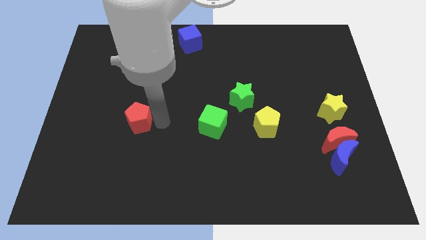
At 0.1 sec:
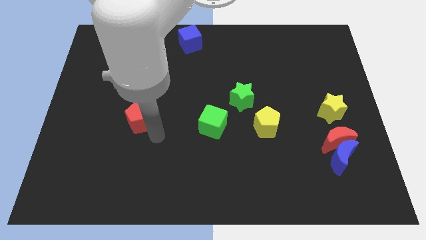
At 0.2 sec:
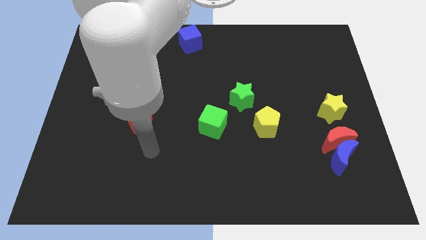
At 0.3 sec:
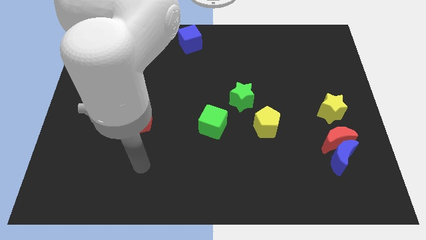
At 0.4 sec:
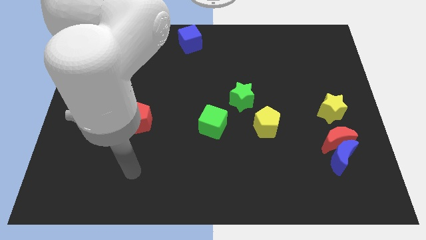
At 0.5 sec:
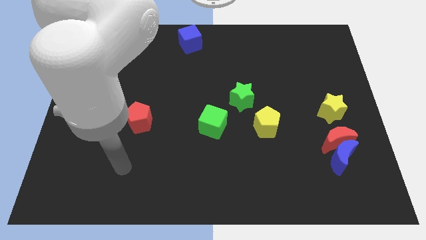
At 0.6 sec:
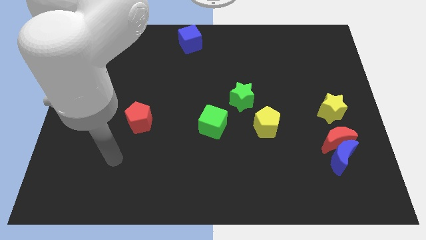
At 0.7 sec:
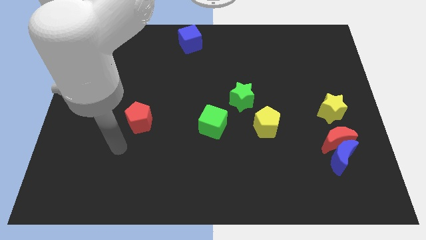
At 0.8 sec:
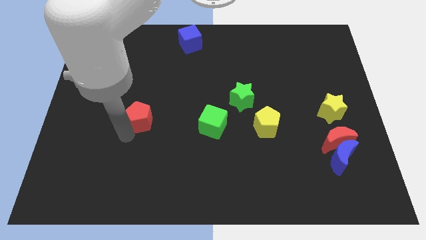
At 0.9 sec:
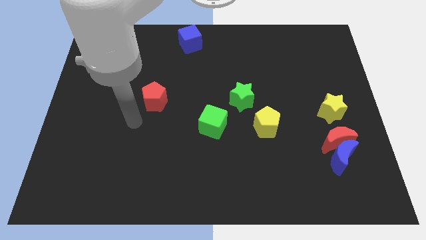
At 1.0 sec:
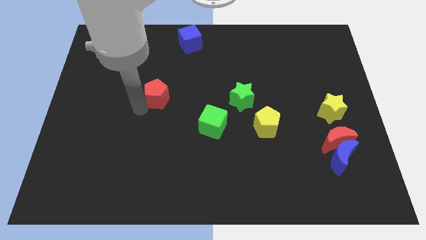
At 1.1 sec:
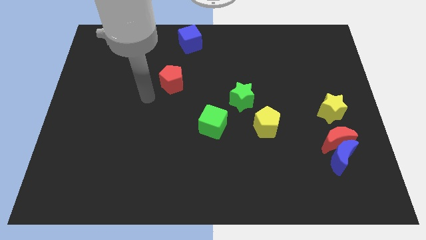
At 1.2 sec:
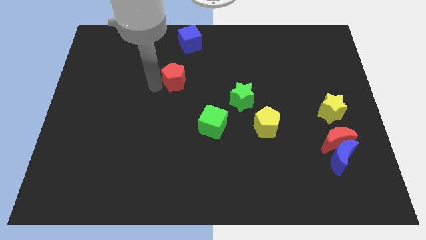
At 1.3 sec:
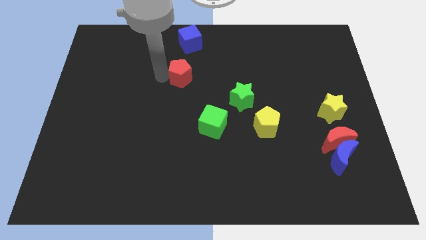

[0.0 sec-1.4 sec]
push the red crescent parallel to the bottom of the blue cube

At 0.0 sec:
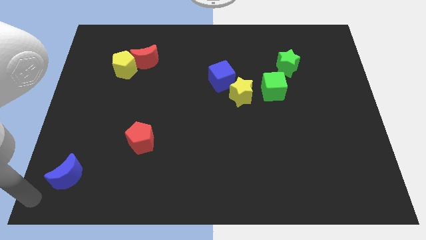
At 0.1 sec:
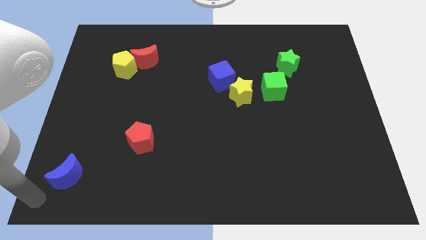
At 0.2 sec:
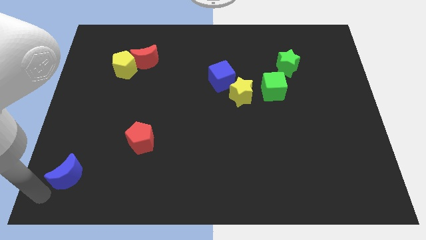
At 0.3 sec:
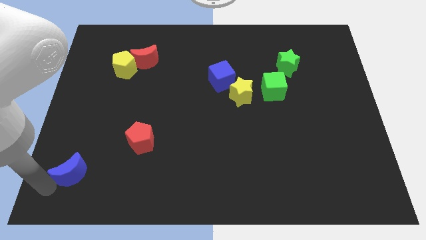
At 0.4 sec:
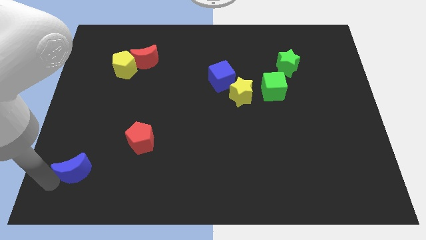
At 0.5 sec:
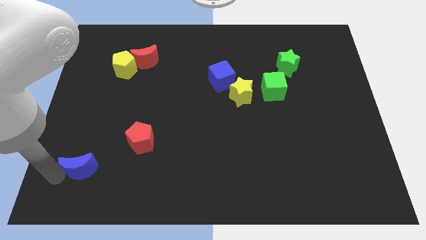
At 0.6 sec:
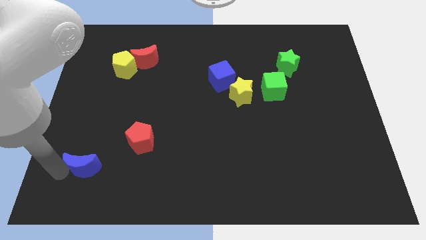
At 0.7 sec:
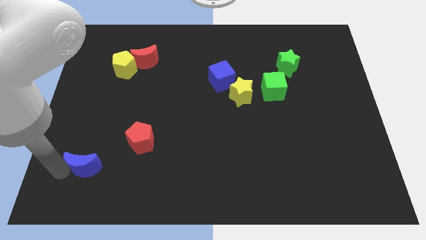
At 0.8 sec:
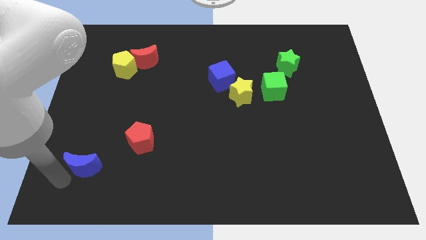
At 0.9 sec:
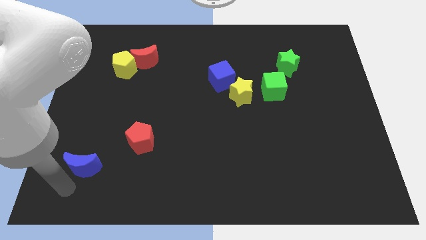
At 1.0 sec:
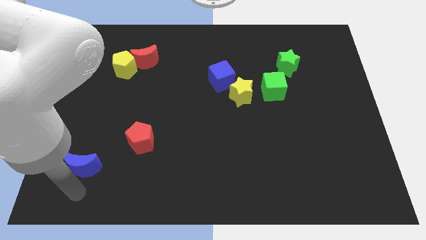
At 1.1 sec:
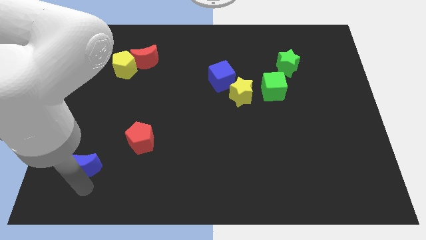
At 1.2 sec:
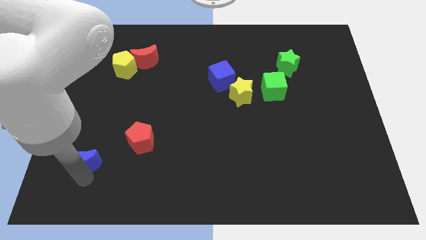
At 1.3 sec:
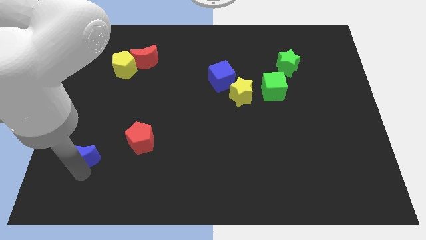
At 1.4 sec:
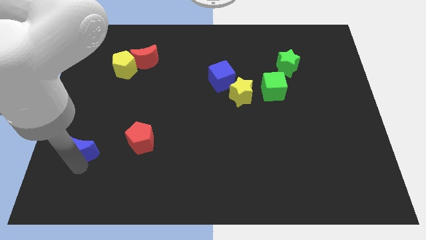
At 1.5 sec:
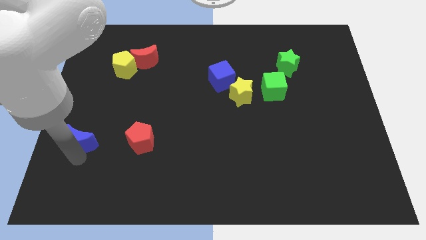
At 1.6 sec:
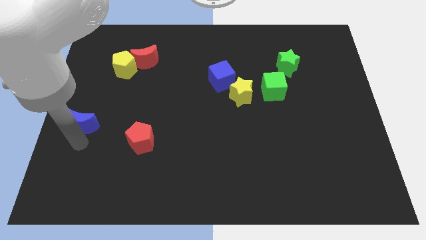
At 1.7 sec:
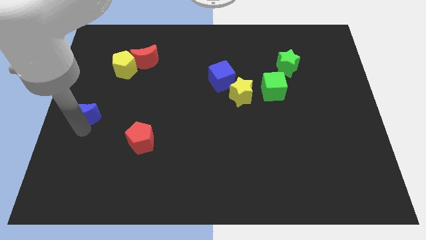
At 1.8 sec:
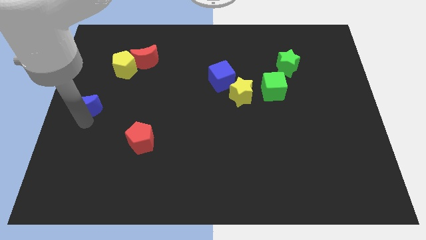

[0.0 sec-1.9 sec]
push the blue crescent towards the top

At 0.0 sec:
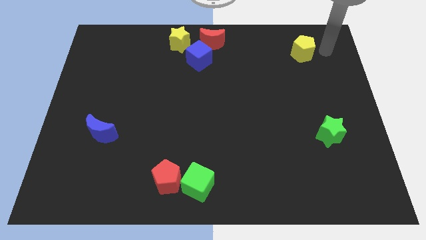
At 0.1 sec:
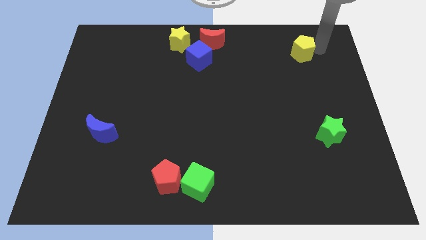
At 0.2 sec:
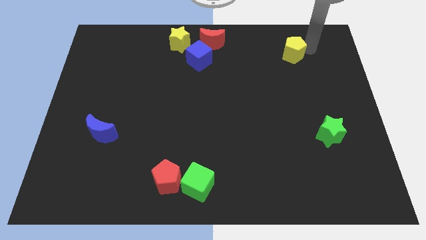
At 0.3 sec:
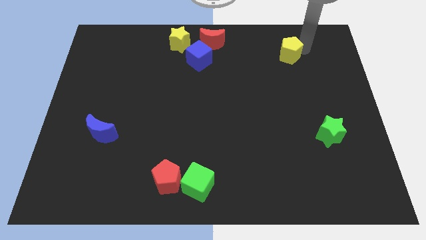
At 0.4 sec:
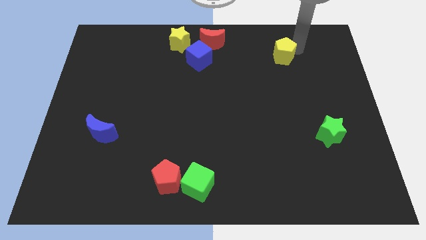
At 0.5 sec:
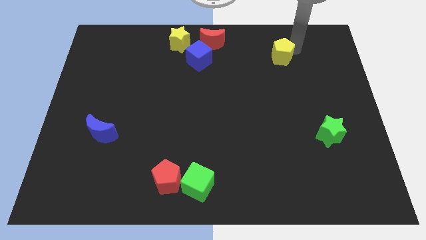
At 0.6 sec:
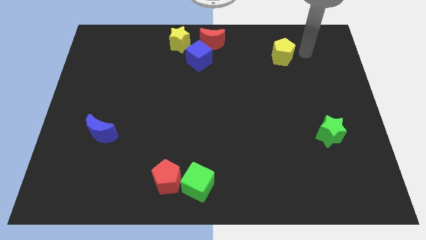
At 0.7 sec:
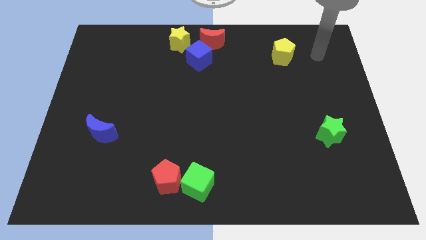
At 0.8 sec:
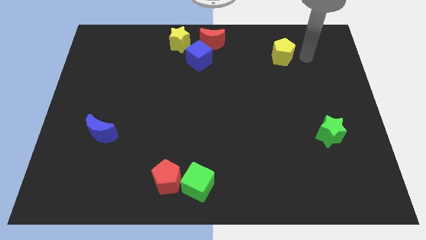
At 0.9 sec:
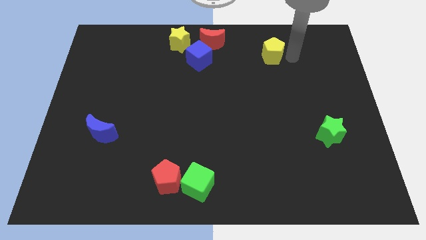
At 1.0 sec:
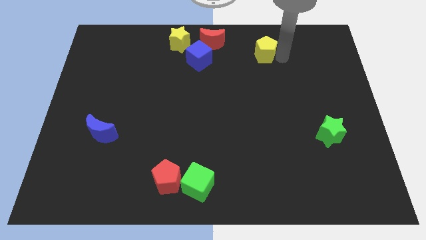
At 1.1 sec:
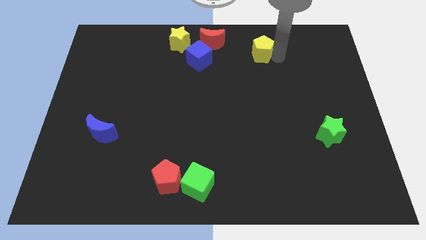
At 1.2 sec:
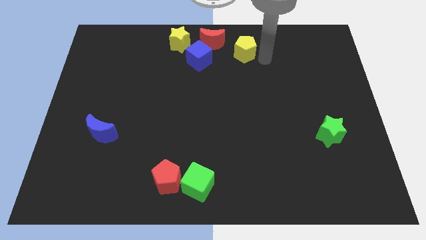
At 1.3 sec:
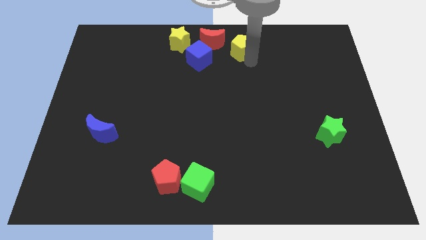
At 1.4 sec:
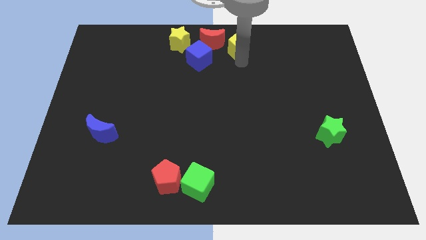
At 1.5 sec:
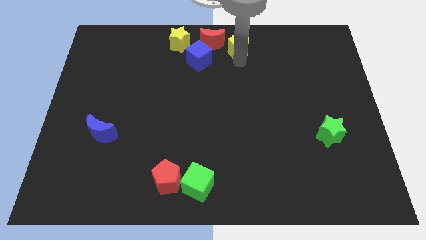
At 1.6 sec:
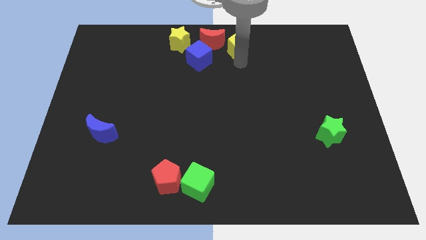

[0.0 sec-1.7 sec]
move the yellow pentagon towards red crescent

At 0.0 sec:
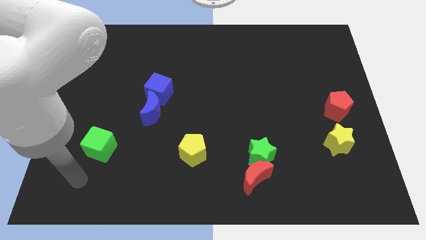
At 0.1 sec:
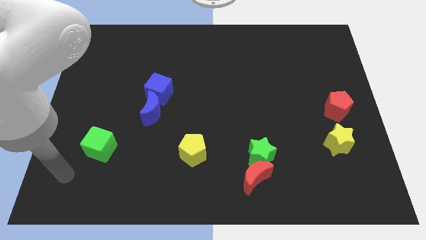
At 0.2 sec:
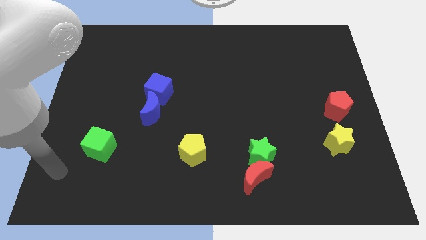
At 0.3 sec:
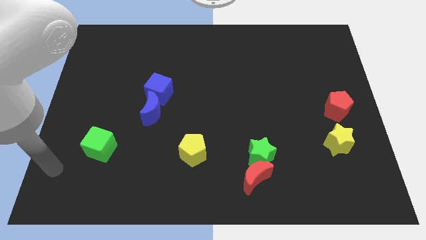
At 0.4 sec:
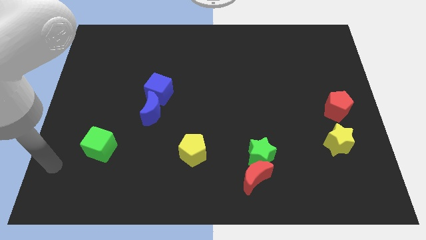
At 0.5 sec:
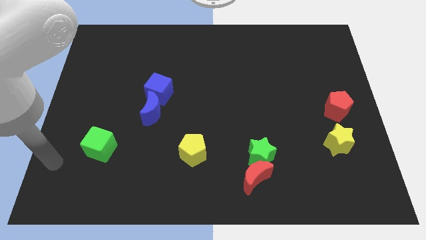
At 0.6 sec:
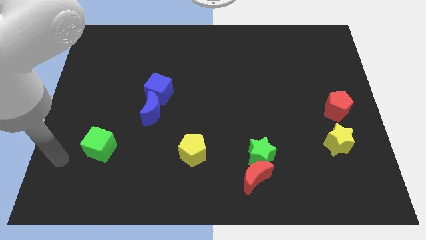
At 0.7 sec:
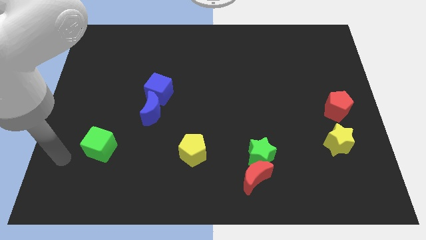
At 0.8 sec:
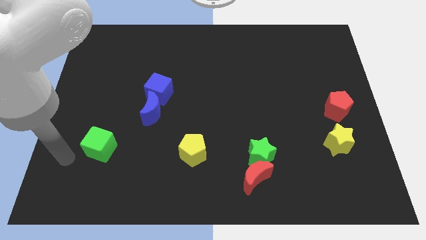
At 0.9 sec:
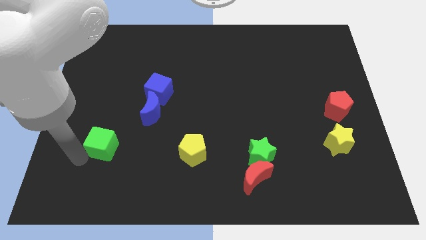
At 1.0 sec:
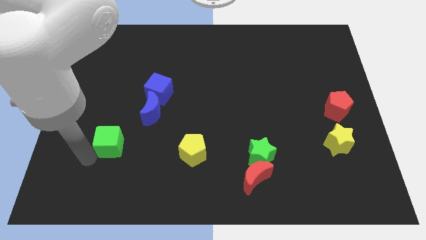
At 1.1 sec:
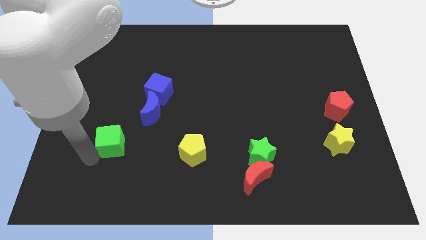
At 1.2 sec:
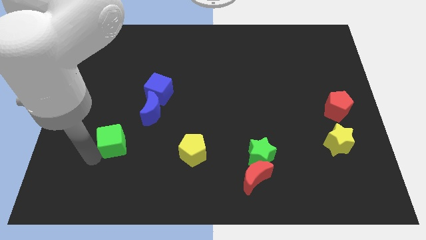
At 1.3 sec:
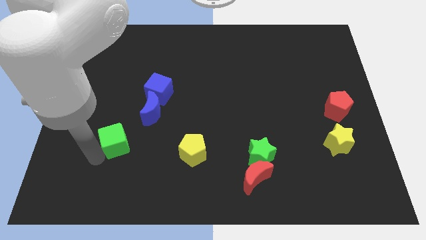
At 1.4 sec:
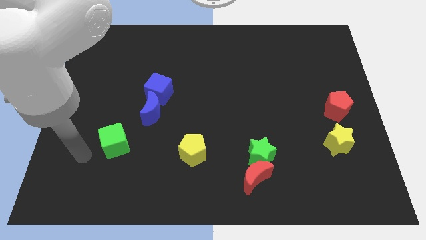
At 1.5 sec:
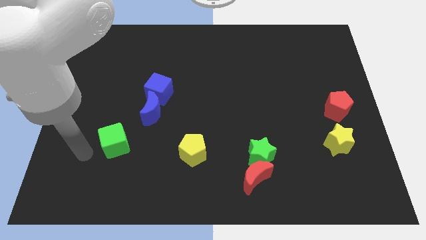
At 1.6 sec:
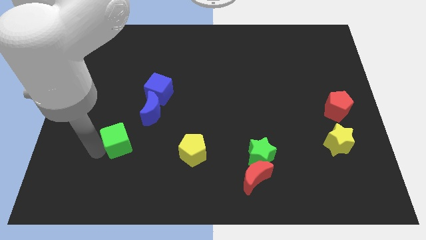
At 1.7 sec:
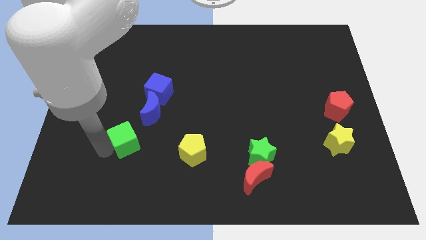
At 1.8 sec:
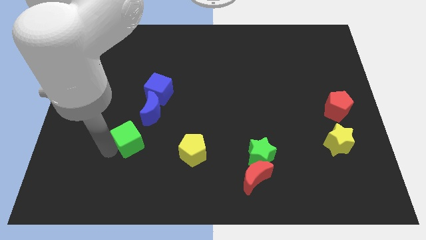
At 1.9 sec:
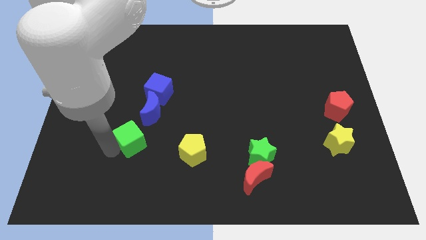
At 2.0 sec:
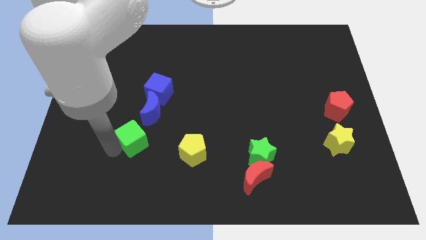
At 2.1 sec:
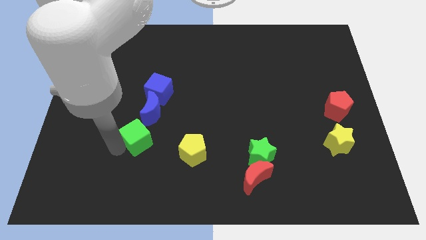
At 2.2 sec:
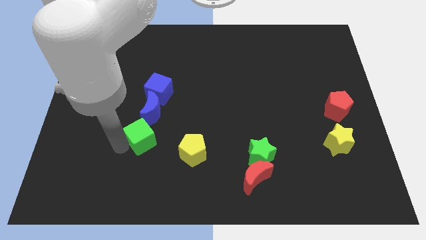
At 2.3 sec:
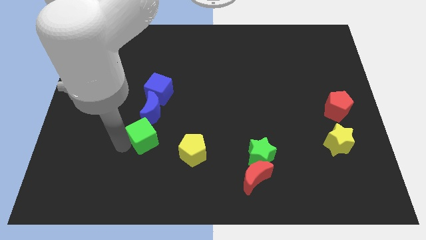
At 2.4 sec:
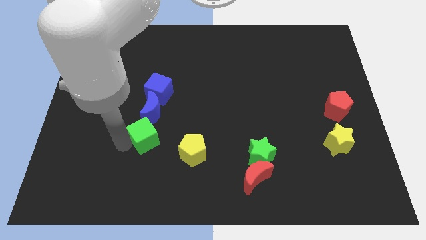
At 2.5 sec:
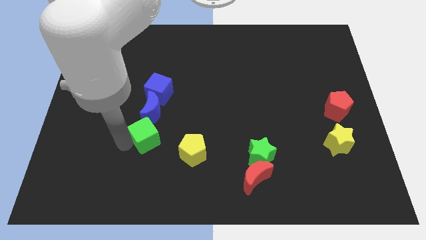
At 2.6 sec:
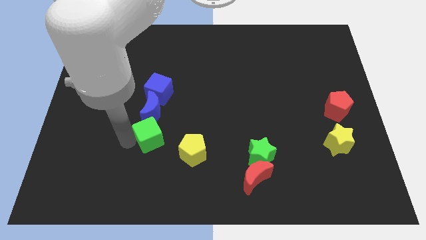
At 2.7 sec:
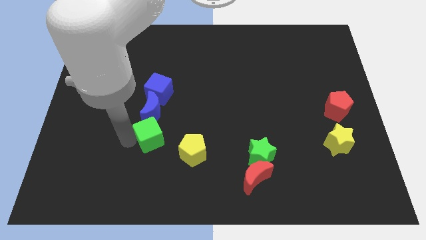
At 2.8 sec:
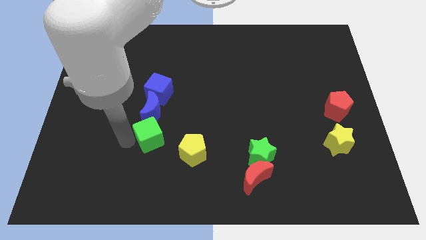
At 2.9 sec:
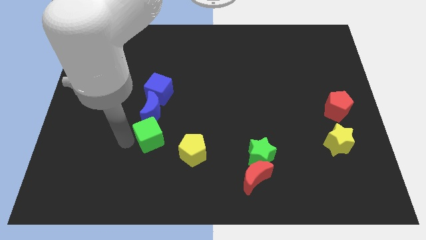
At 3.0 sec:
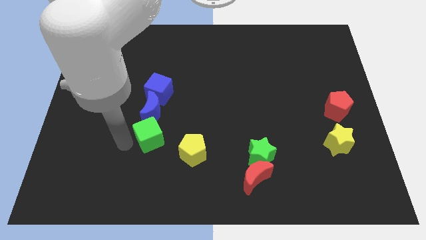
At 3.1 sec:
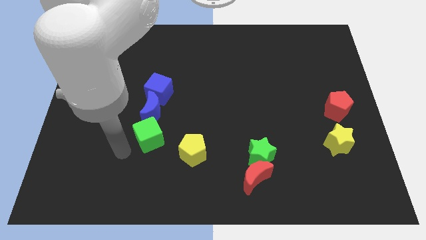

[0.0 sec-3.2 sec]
place the green cube below the blue crescent

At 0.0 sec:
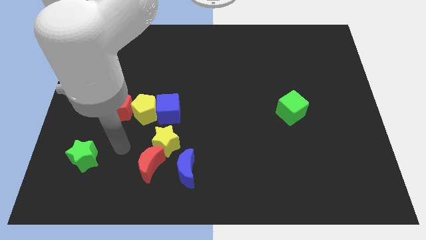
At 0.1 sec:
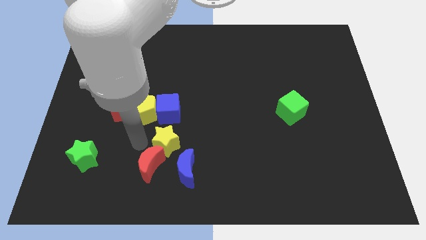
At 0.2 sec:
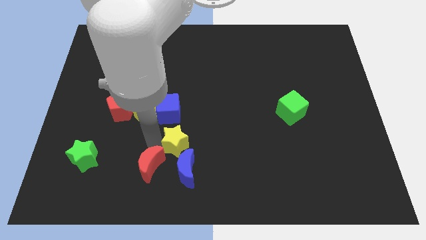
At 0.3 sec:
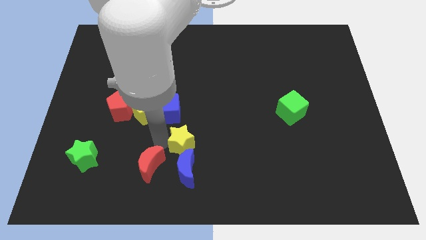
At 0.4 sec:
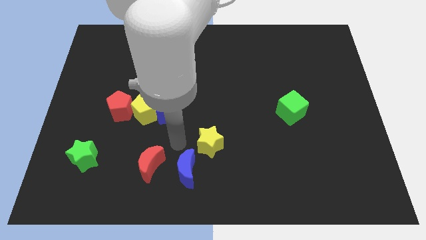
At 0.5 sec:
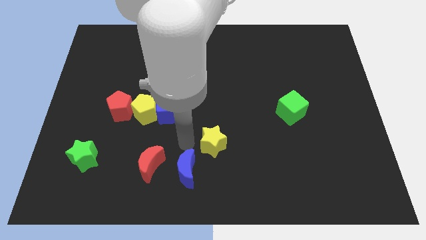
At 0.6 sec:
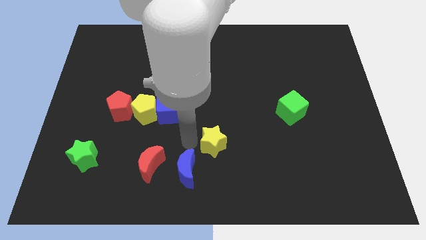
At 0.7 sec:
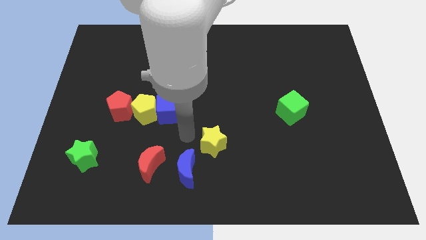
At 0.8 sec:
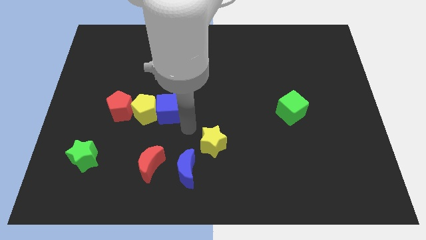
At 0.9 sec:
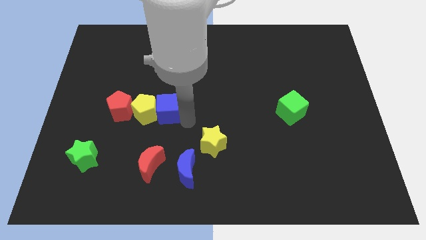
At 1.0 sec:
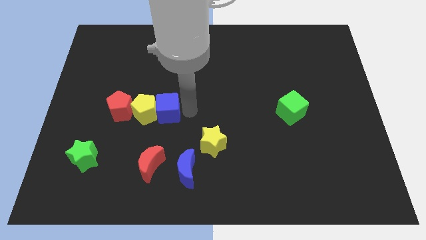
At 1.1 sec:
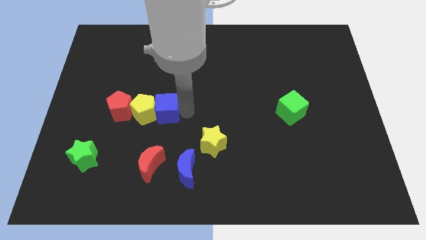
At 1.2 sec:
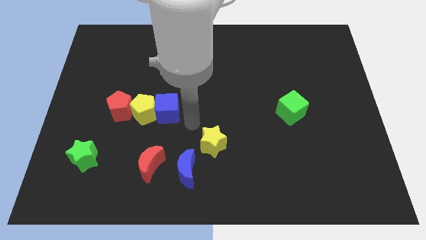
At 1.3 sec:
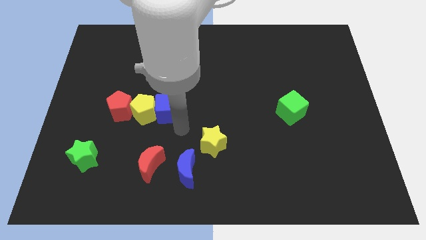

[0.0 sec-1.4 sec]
push the yellow star to the top right of the blue crescent
